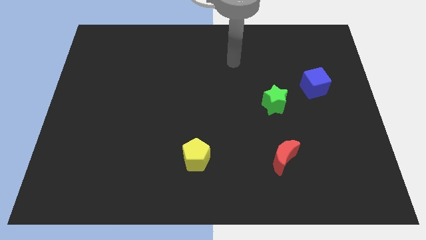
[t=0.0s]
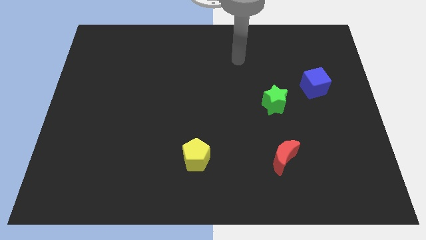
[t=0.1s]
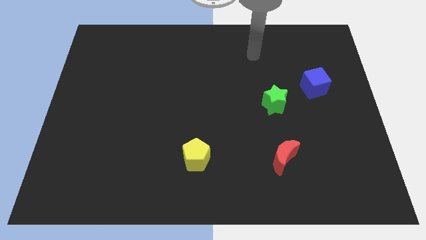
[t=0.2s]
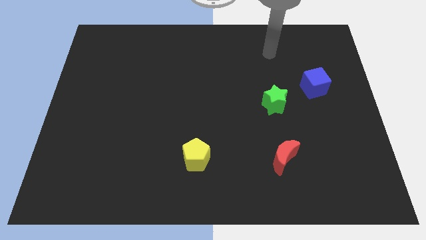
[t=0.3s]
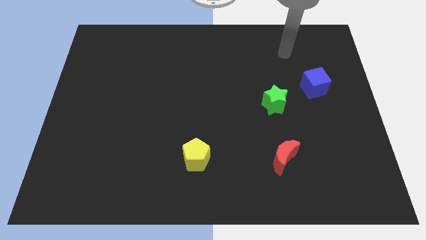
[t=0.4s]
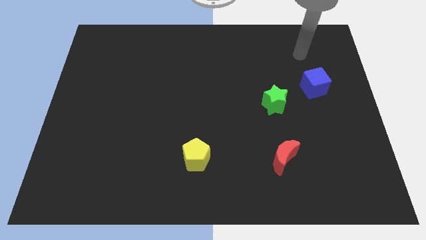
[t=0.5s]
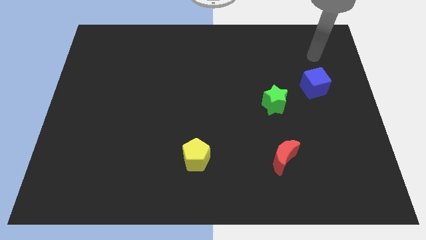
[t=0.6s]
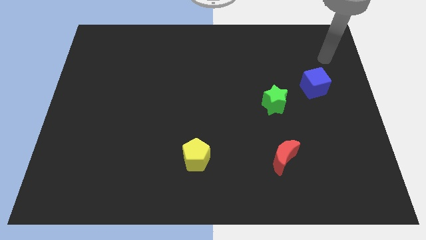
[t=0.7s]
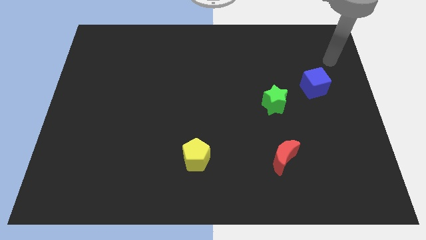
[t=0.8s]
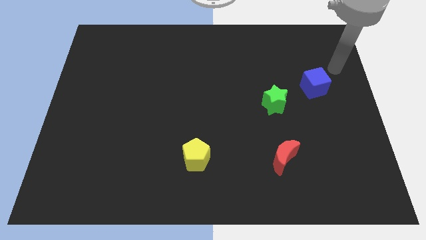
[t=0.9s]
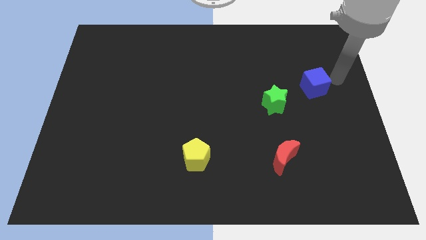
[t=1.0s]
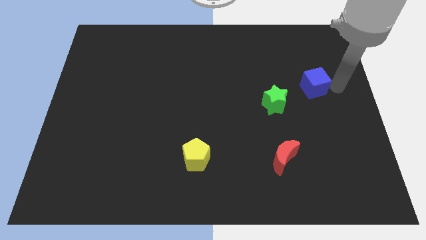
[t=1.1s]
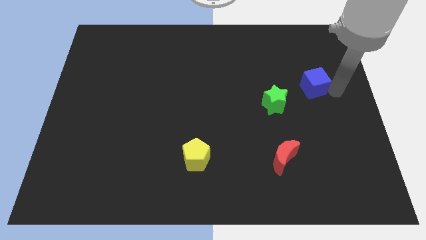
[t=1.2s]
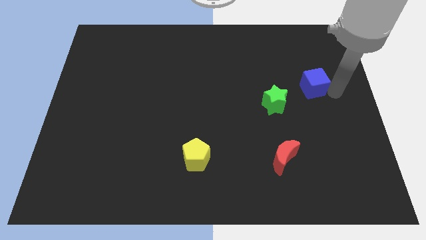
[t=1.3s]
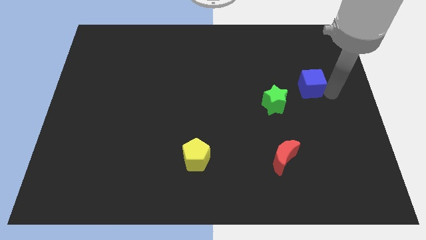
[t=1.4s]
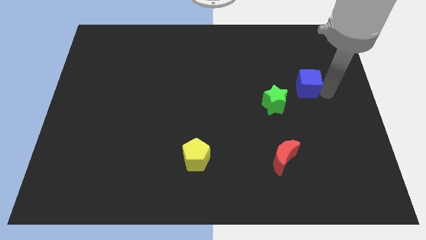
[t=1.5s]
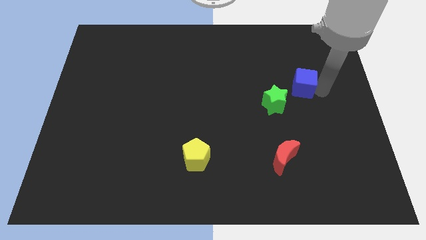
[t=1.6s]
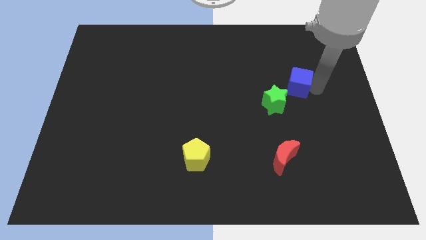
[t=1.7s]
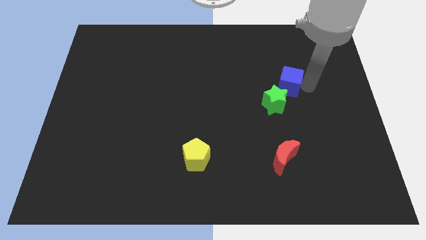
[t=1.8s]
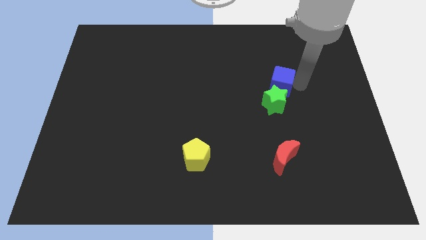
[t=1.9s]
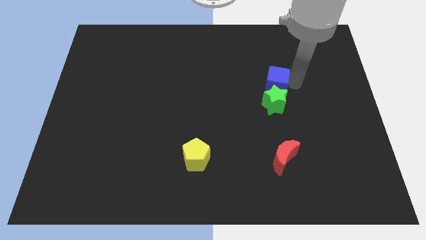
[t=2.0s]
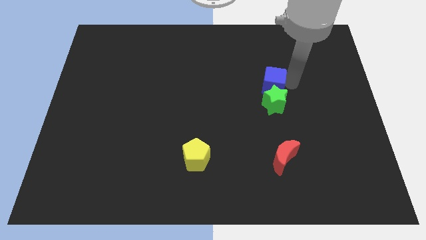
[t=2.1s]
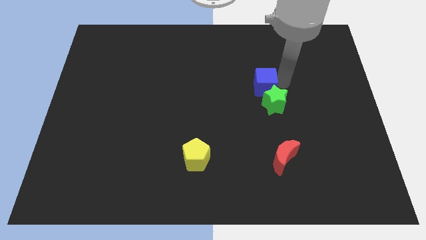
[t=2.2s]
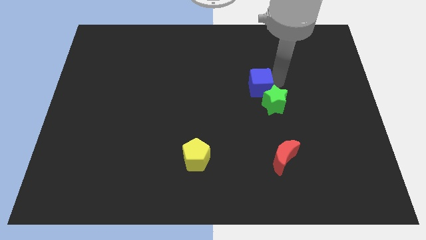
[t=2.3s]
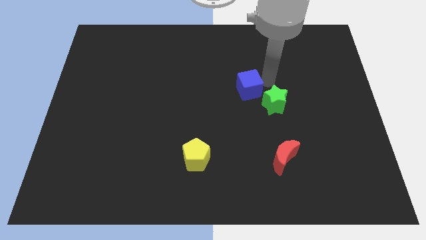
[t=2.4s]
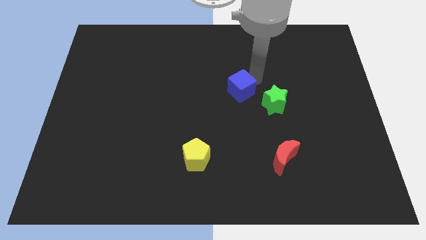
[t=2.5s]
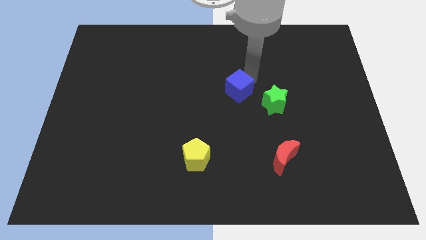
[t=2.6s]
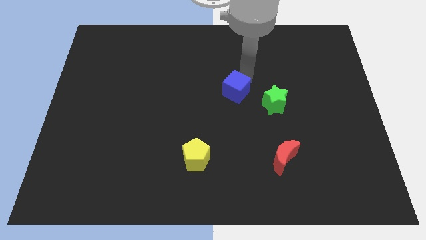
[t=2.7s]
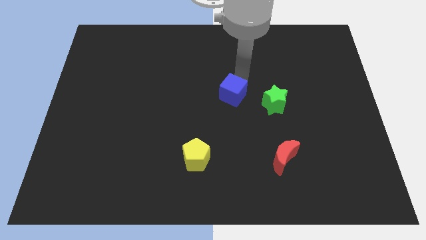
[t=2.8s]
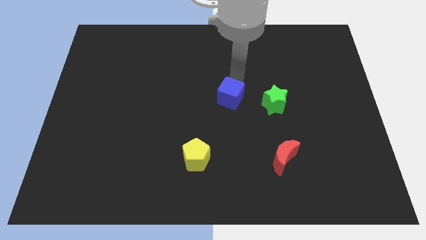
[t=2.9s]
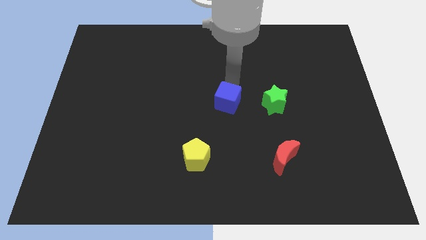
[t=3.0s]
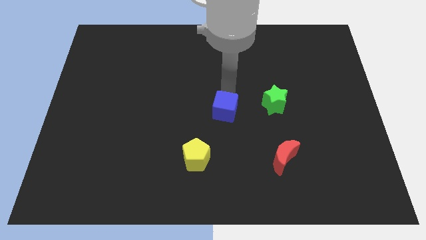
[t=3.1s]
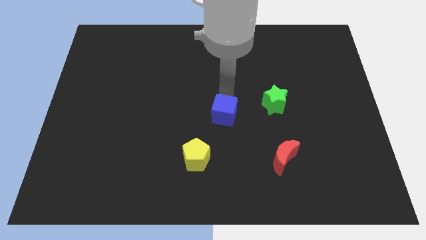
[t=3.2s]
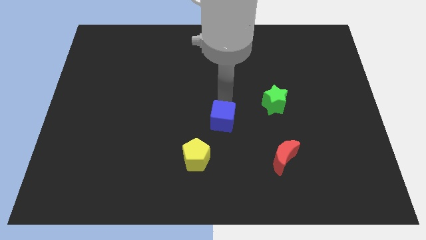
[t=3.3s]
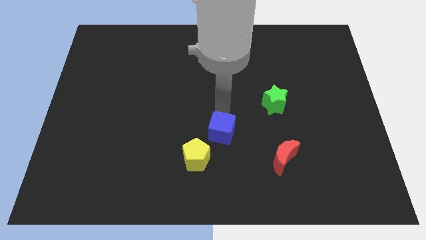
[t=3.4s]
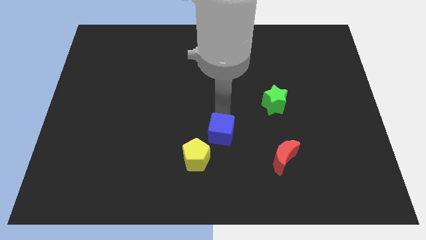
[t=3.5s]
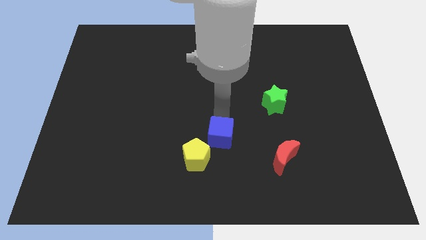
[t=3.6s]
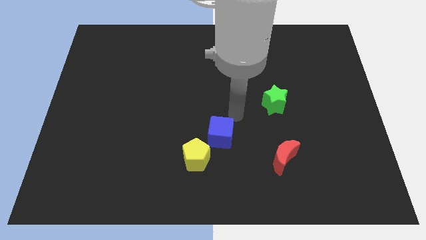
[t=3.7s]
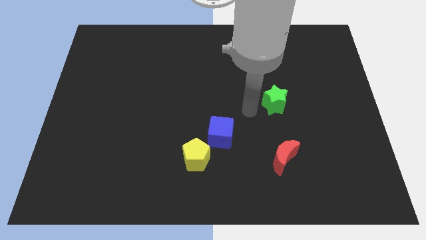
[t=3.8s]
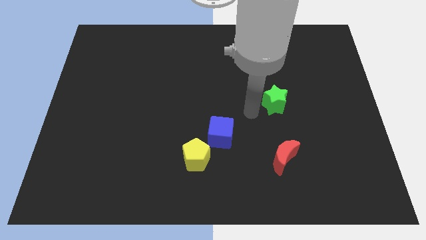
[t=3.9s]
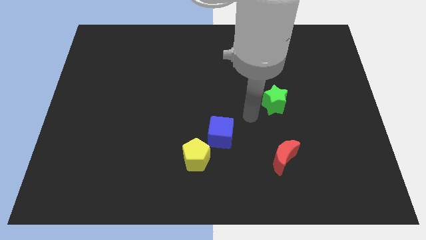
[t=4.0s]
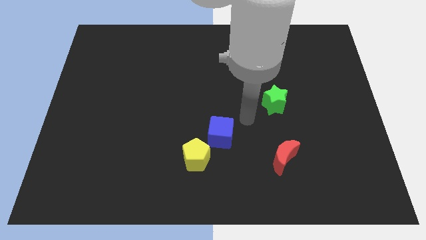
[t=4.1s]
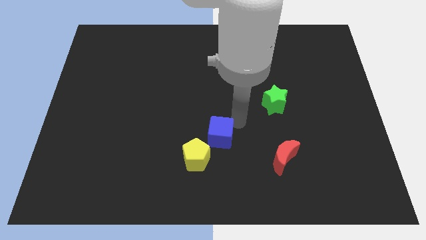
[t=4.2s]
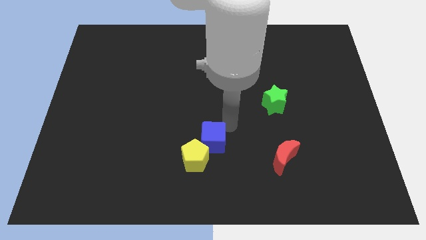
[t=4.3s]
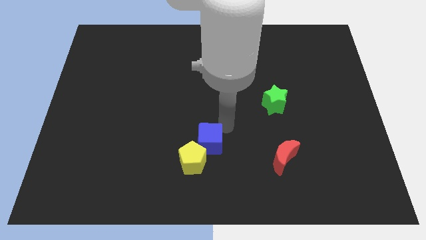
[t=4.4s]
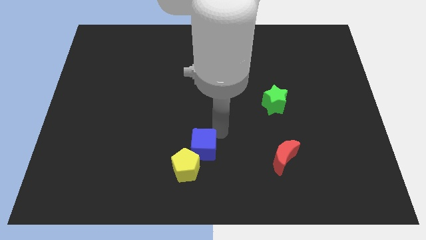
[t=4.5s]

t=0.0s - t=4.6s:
move the cube next to the yellow pentagon

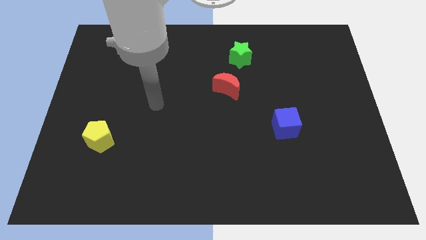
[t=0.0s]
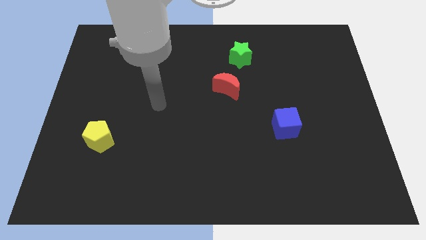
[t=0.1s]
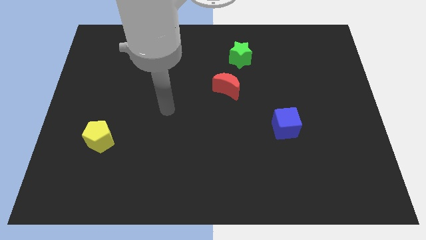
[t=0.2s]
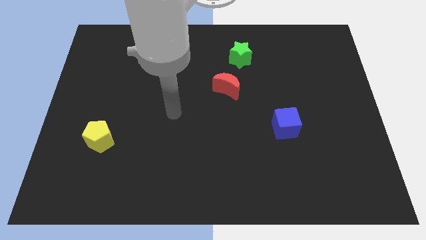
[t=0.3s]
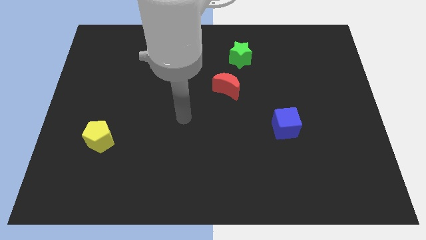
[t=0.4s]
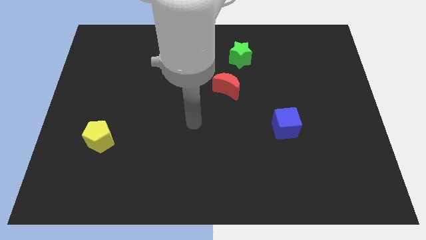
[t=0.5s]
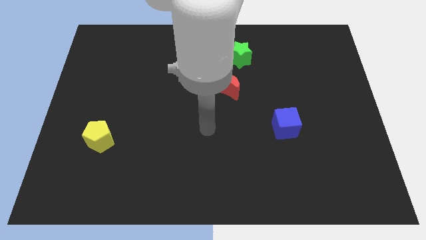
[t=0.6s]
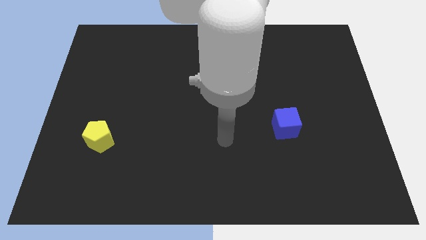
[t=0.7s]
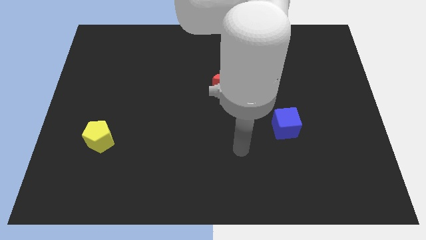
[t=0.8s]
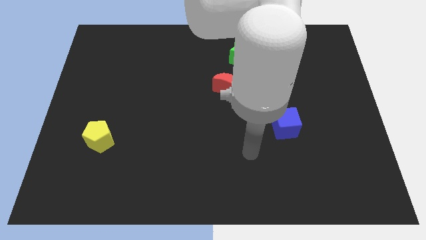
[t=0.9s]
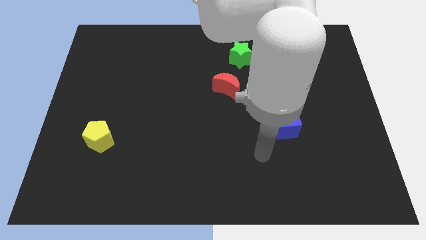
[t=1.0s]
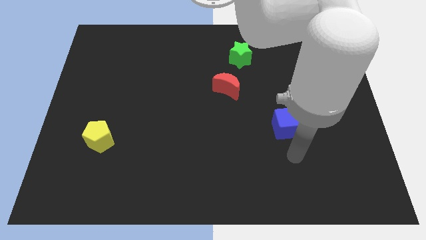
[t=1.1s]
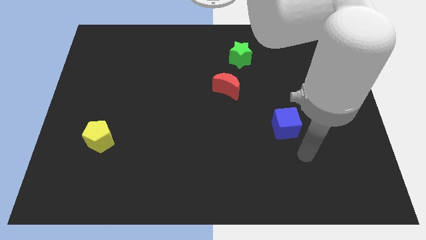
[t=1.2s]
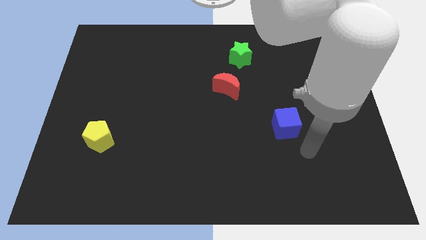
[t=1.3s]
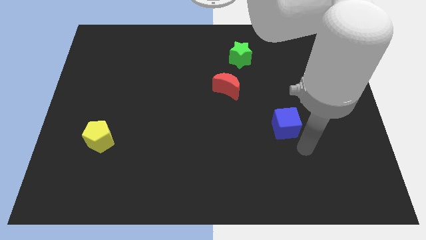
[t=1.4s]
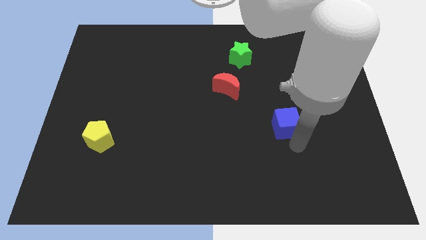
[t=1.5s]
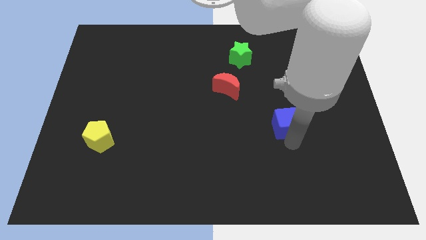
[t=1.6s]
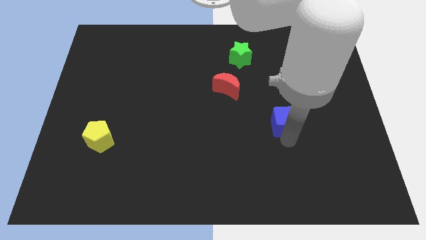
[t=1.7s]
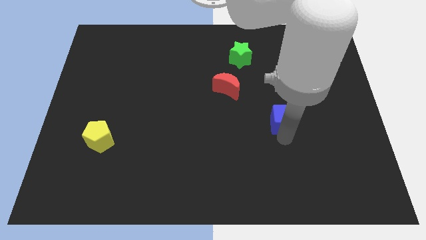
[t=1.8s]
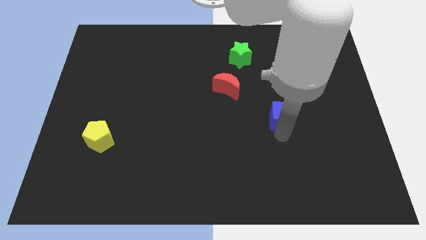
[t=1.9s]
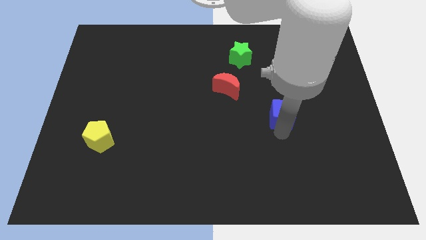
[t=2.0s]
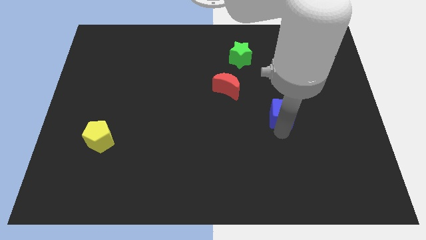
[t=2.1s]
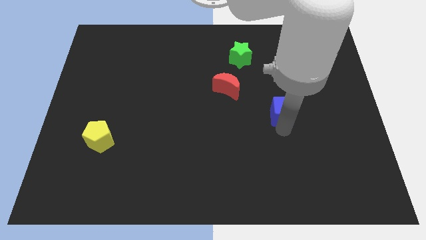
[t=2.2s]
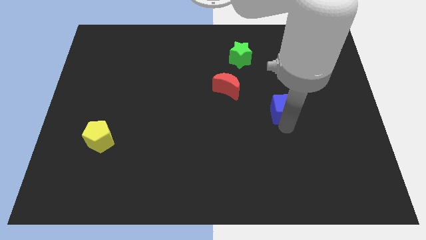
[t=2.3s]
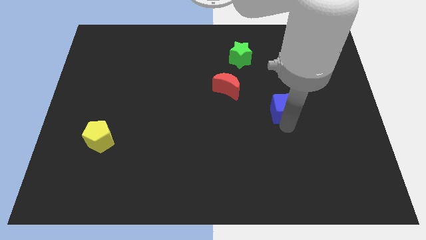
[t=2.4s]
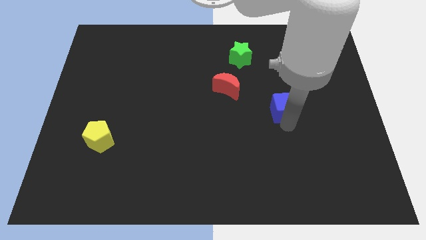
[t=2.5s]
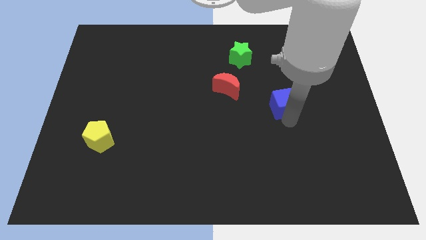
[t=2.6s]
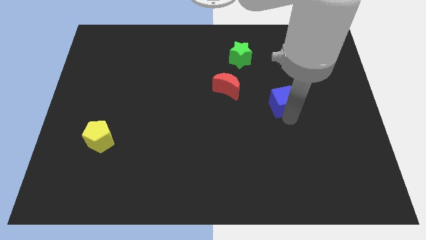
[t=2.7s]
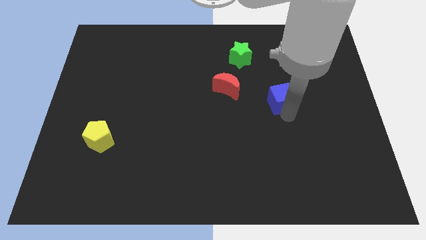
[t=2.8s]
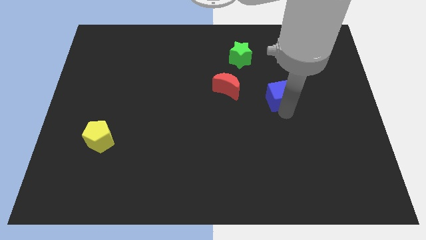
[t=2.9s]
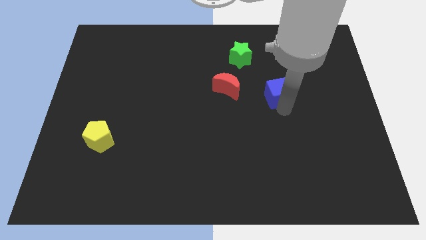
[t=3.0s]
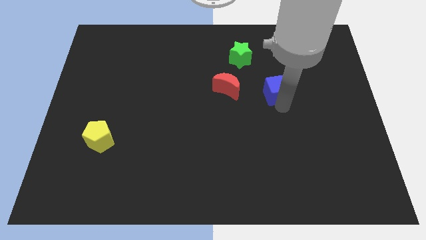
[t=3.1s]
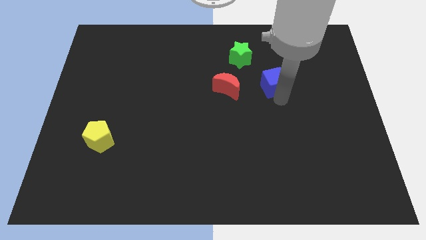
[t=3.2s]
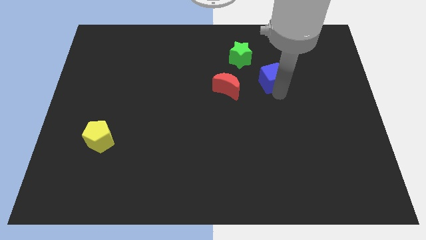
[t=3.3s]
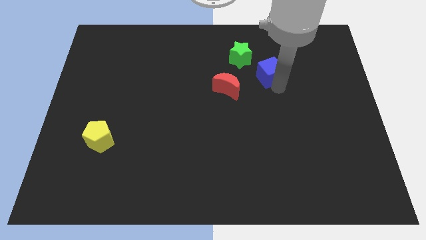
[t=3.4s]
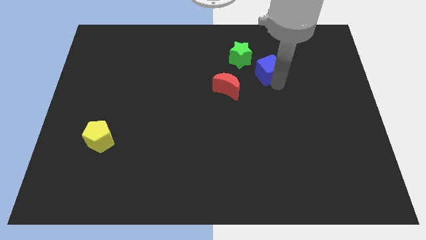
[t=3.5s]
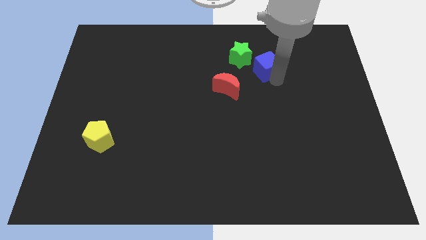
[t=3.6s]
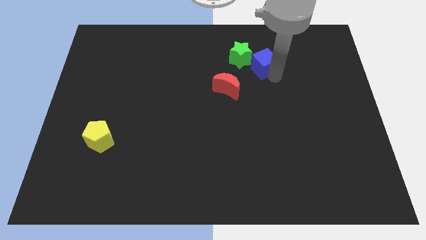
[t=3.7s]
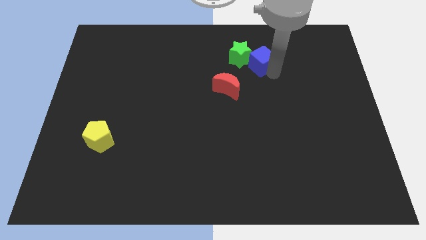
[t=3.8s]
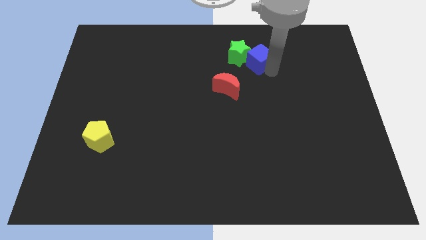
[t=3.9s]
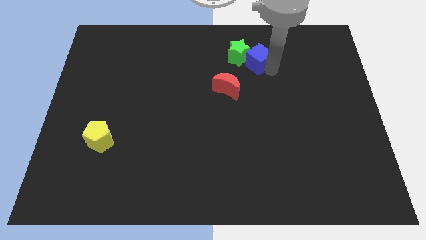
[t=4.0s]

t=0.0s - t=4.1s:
push the blue cube to the green block

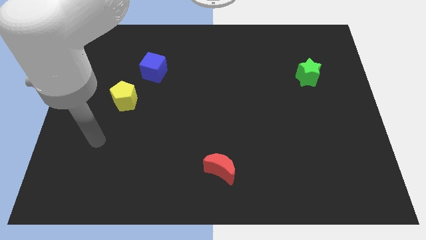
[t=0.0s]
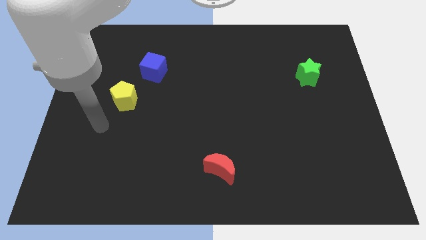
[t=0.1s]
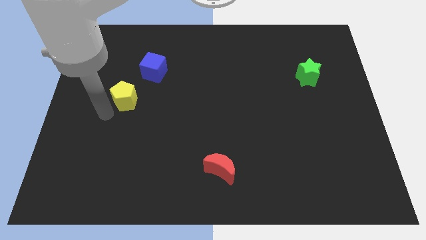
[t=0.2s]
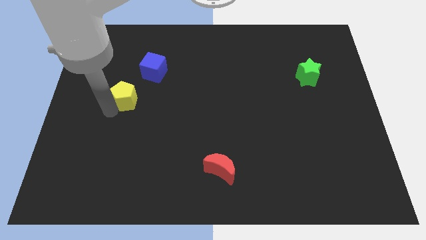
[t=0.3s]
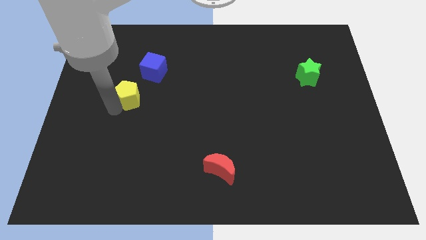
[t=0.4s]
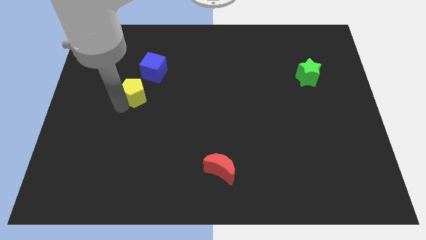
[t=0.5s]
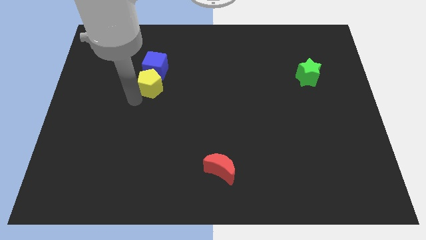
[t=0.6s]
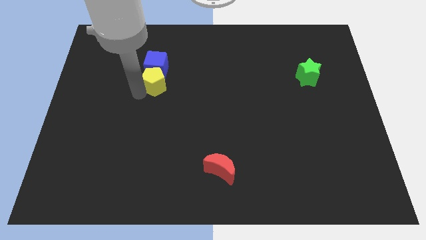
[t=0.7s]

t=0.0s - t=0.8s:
push the pentagon close to the blue block
